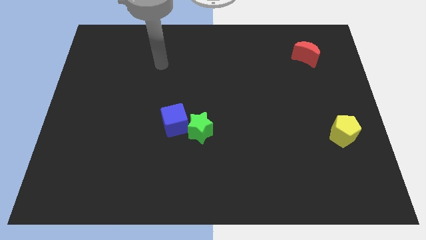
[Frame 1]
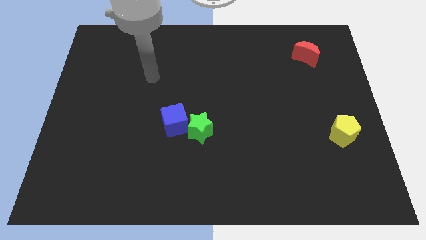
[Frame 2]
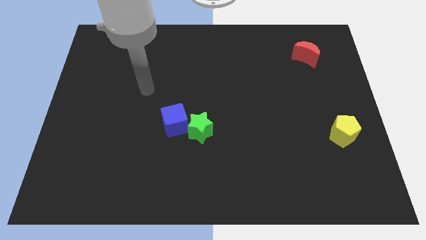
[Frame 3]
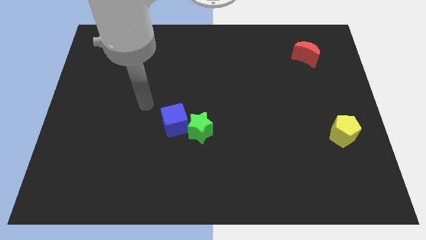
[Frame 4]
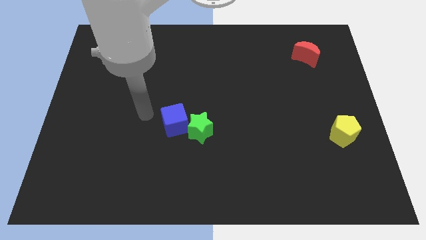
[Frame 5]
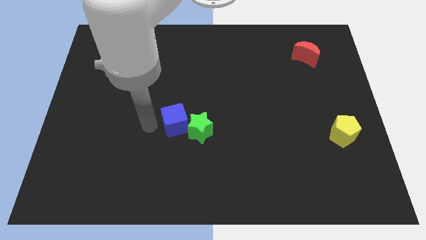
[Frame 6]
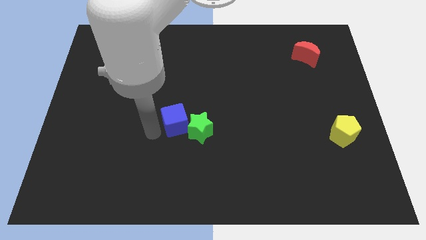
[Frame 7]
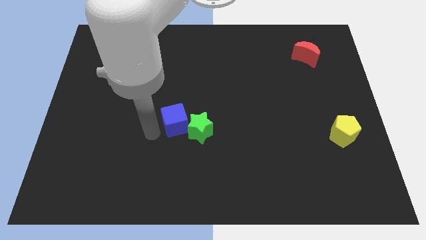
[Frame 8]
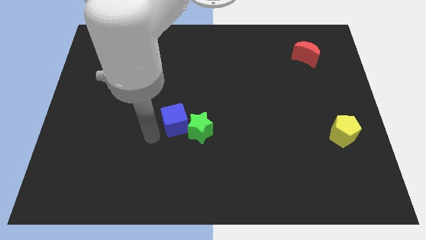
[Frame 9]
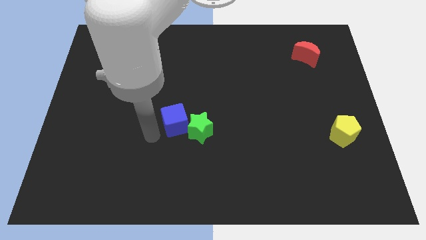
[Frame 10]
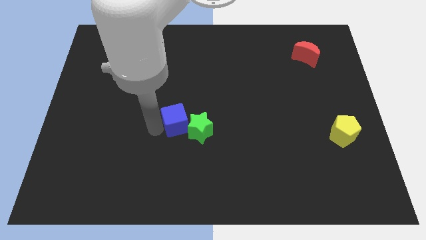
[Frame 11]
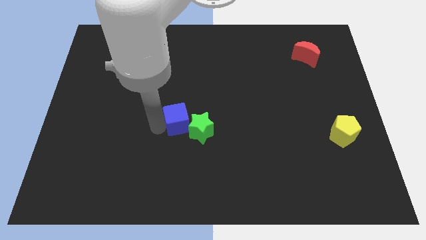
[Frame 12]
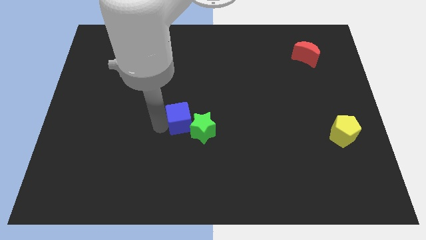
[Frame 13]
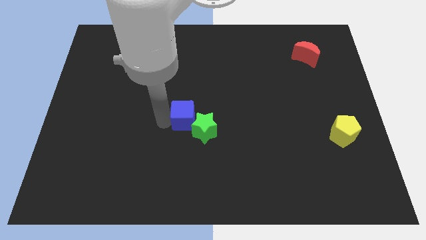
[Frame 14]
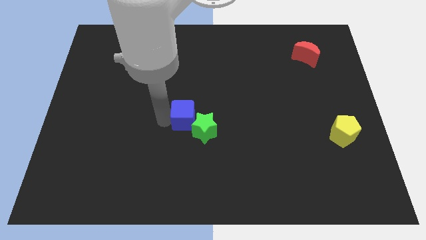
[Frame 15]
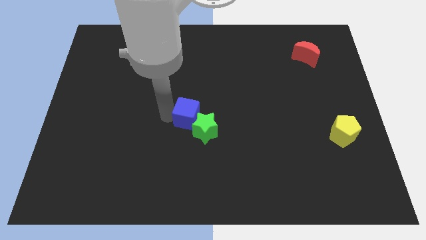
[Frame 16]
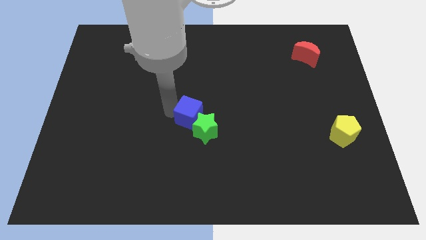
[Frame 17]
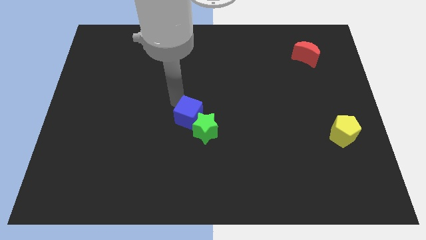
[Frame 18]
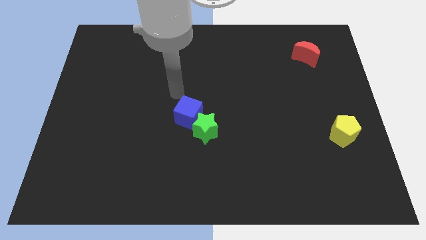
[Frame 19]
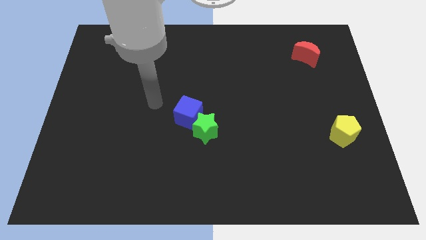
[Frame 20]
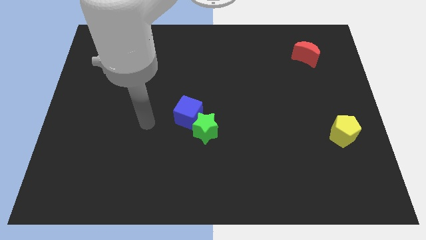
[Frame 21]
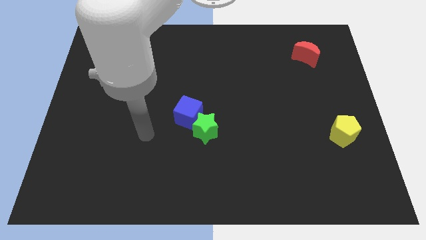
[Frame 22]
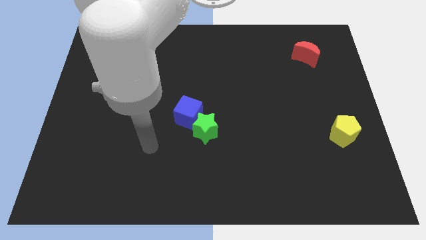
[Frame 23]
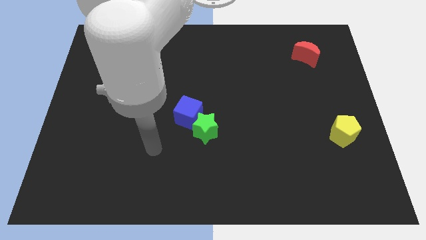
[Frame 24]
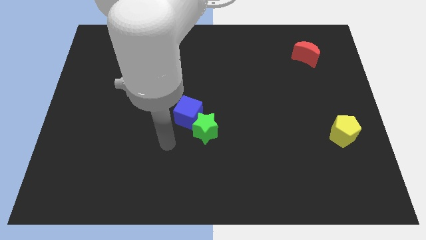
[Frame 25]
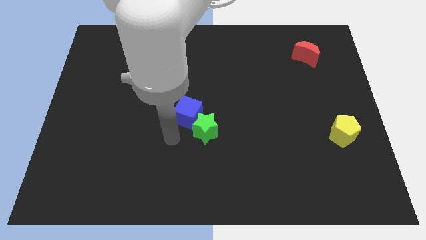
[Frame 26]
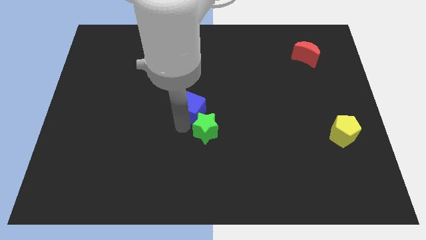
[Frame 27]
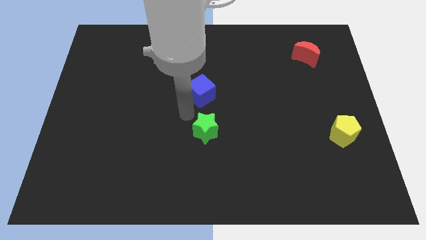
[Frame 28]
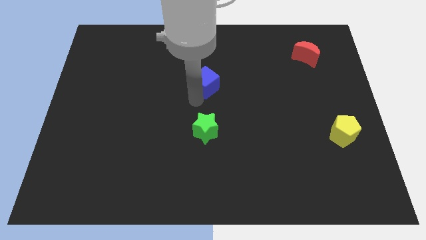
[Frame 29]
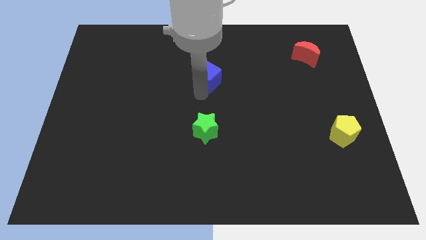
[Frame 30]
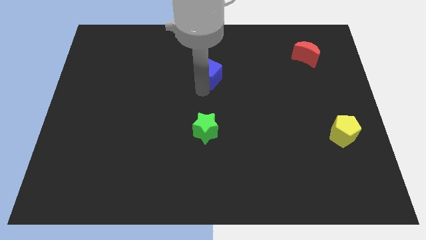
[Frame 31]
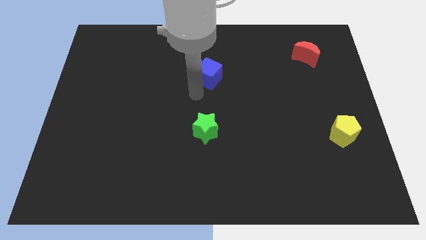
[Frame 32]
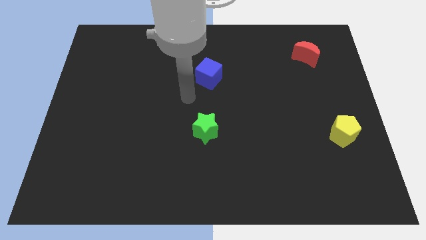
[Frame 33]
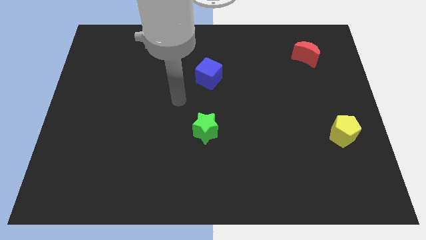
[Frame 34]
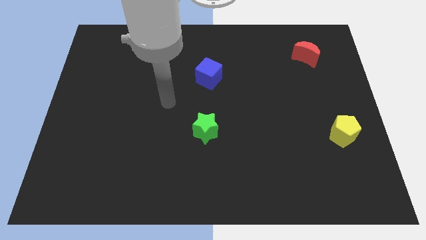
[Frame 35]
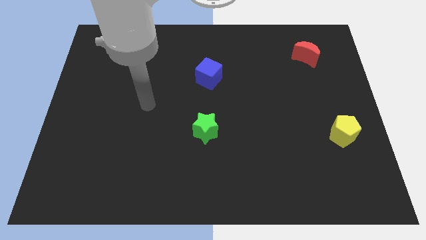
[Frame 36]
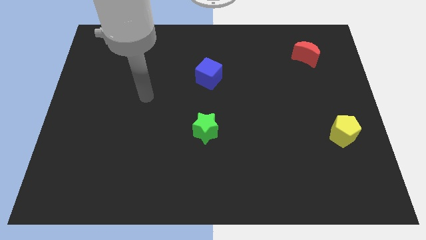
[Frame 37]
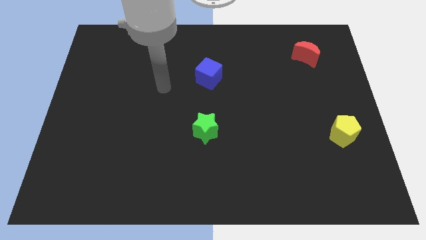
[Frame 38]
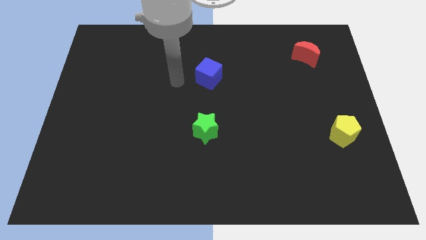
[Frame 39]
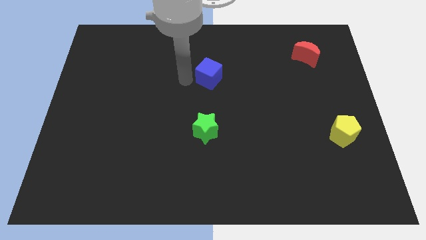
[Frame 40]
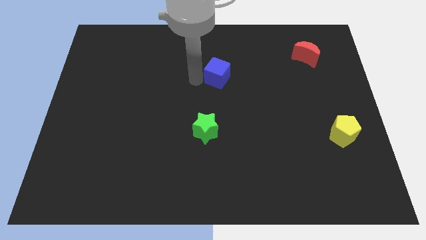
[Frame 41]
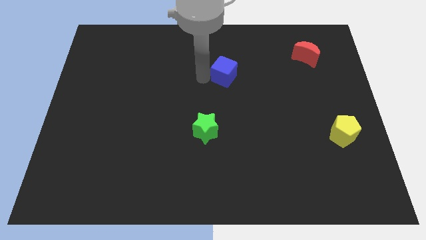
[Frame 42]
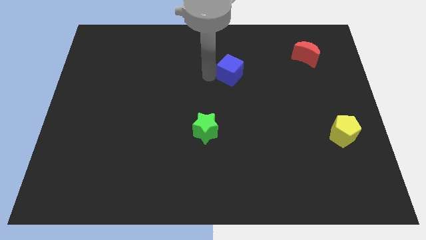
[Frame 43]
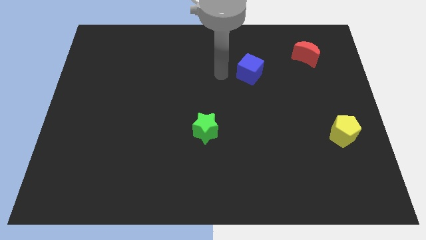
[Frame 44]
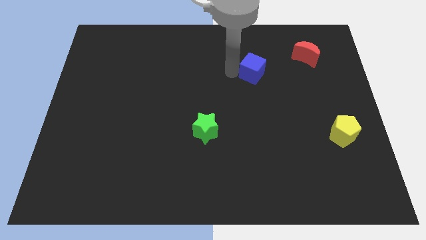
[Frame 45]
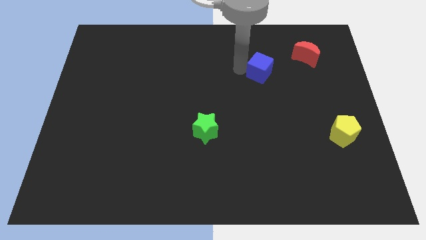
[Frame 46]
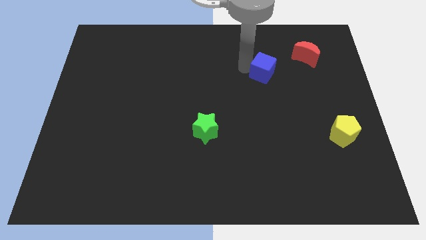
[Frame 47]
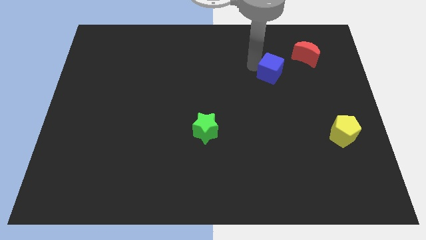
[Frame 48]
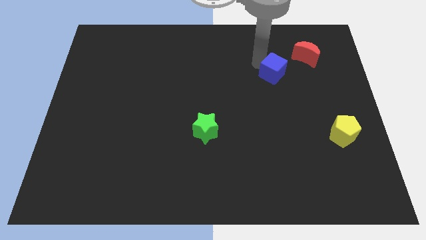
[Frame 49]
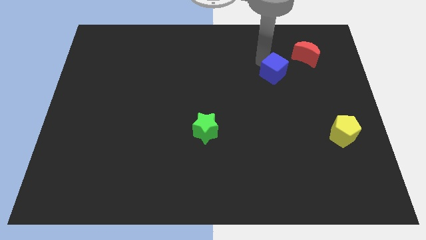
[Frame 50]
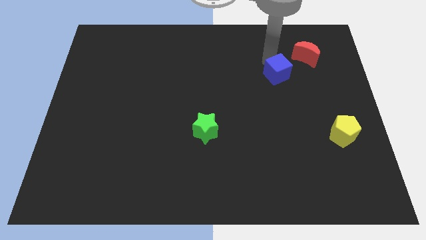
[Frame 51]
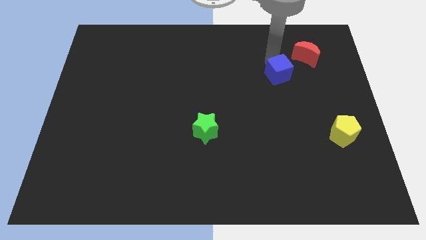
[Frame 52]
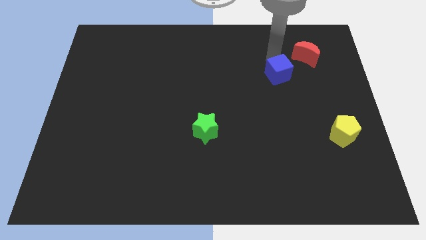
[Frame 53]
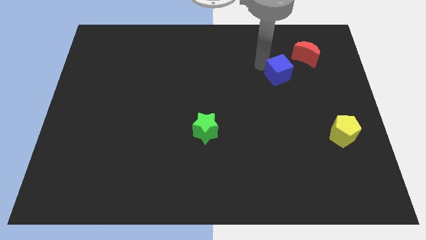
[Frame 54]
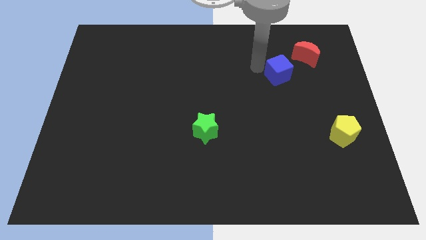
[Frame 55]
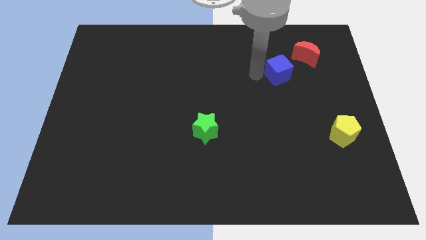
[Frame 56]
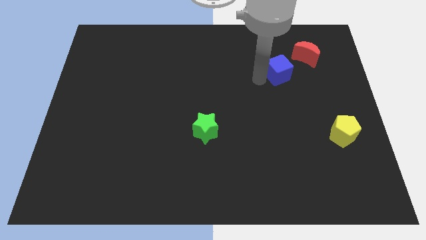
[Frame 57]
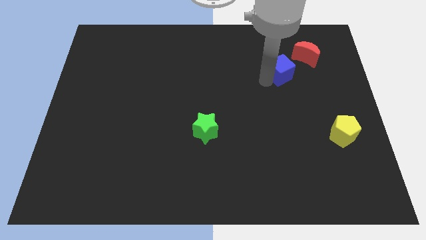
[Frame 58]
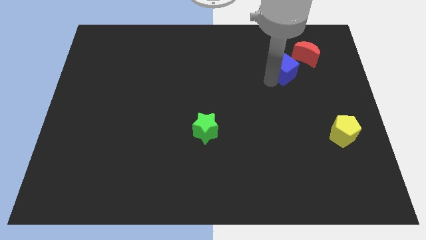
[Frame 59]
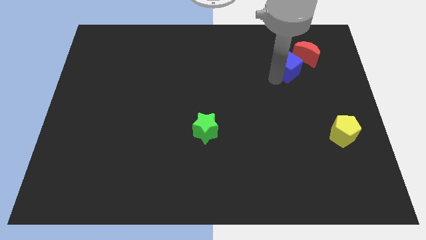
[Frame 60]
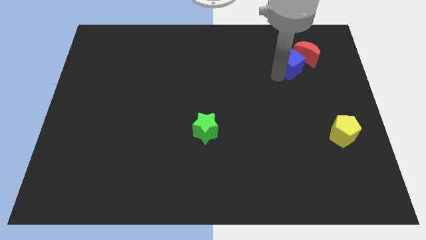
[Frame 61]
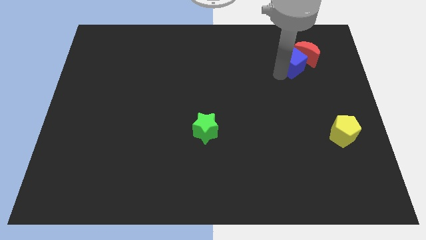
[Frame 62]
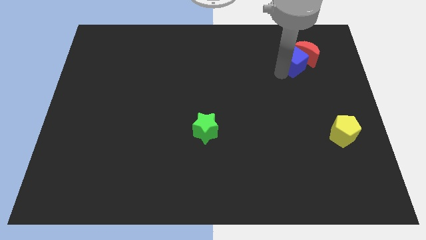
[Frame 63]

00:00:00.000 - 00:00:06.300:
put the blue block next to the red moon

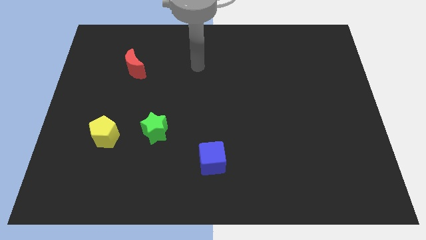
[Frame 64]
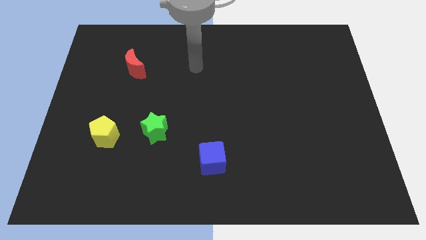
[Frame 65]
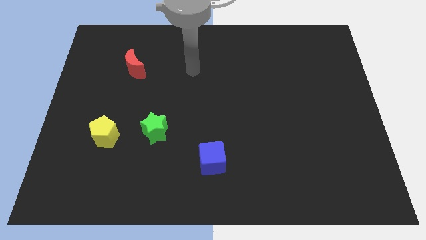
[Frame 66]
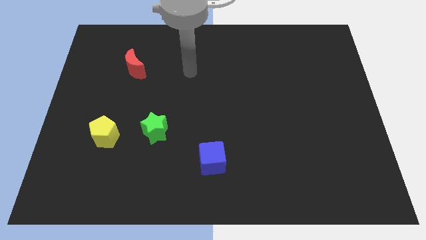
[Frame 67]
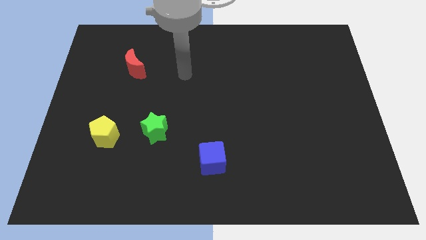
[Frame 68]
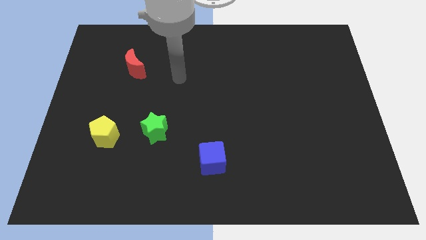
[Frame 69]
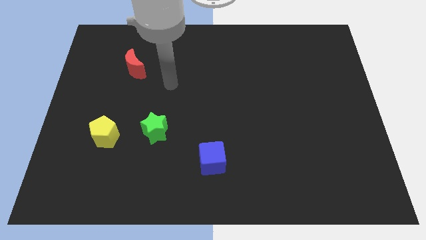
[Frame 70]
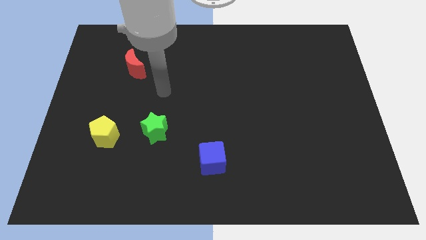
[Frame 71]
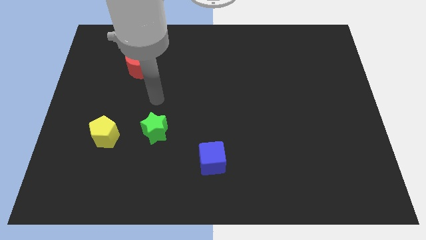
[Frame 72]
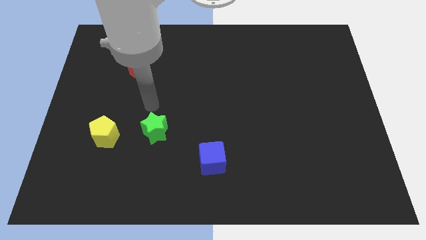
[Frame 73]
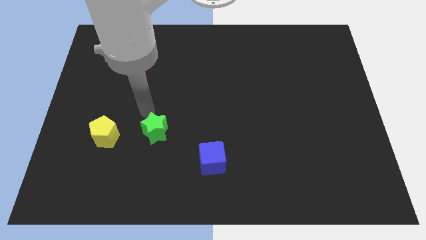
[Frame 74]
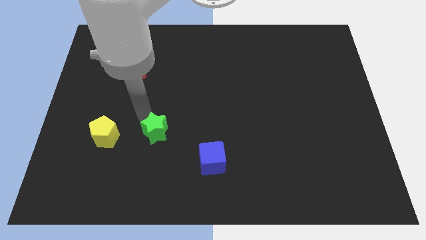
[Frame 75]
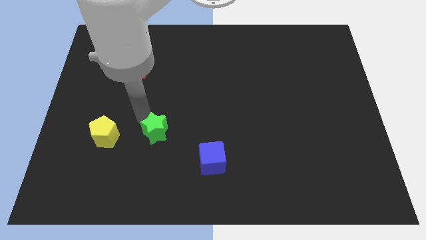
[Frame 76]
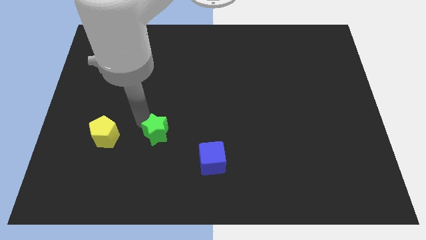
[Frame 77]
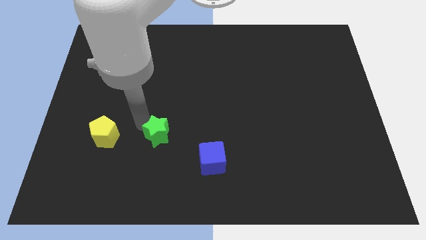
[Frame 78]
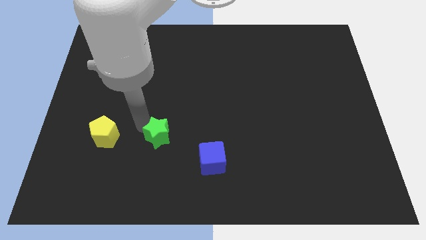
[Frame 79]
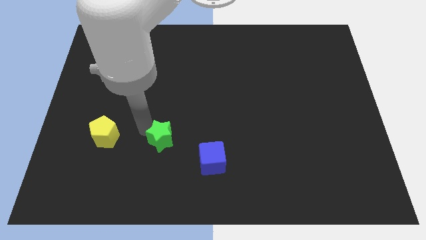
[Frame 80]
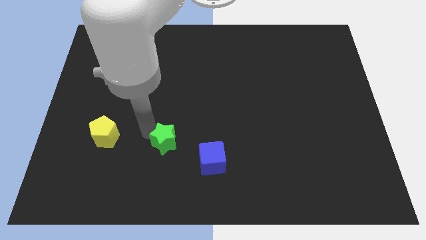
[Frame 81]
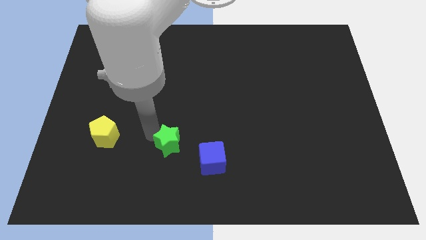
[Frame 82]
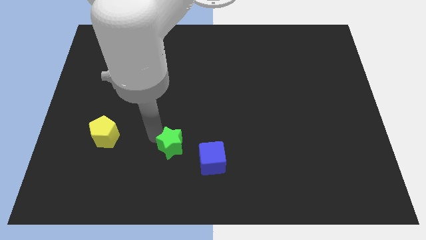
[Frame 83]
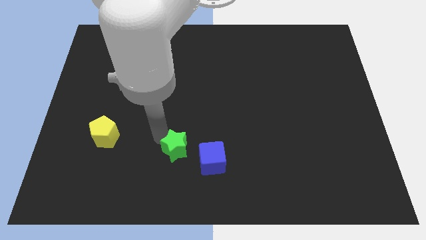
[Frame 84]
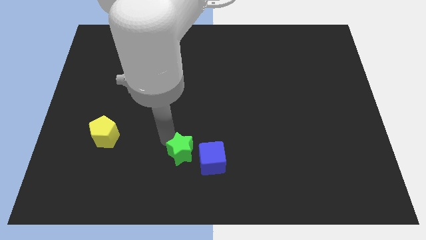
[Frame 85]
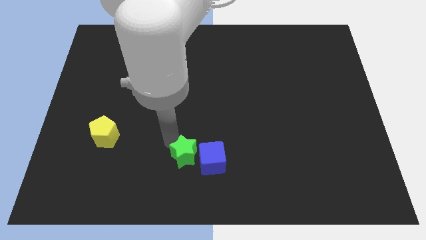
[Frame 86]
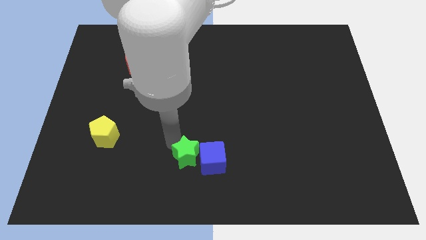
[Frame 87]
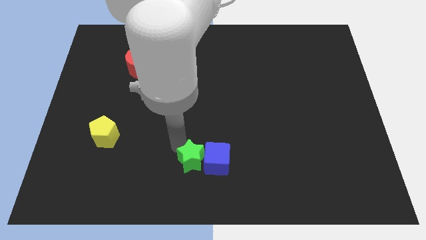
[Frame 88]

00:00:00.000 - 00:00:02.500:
push the green star to the cube
